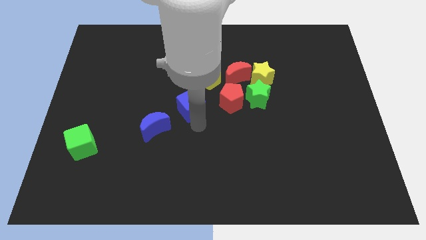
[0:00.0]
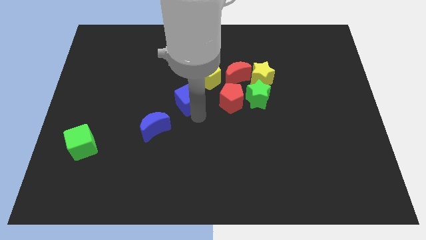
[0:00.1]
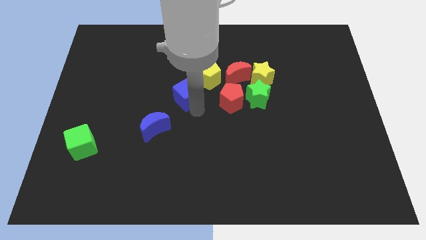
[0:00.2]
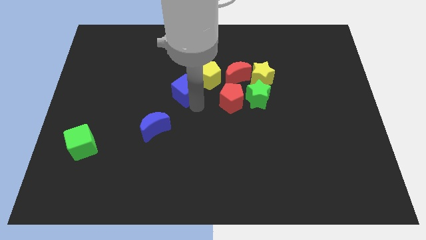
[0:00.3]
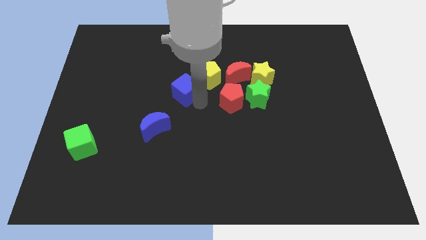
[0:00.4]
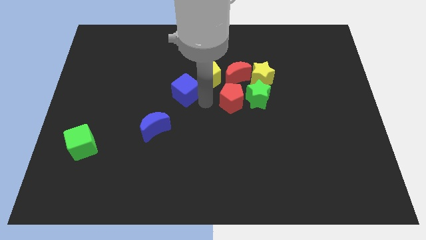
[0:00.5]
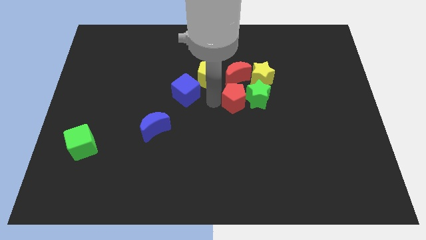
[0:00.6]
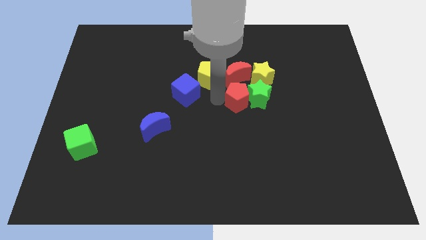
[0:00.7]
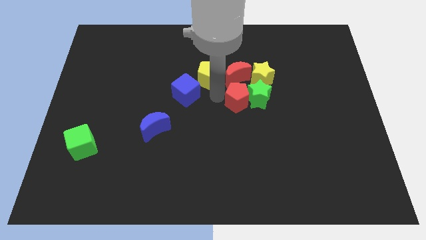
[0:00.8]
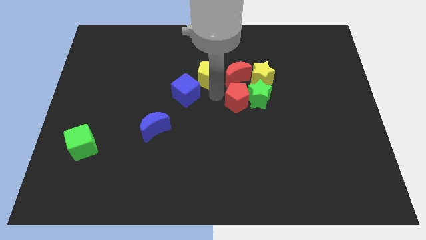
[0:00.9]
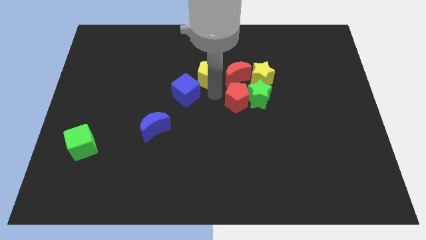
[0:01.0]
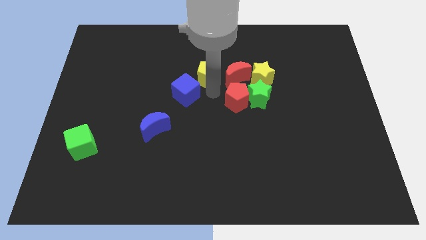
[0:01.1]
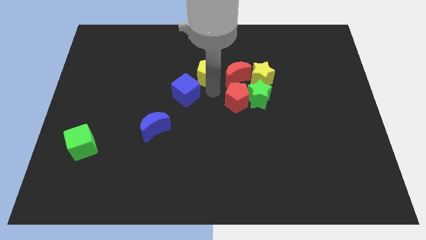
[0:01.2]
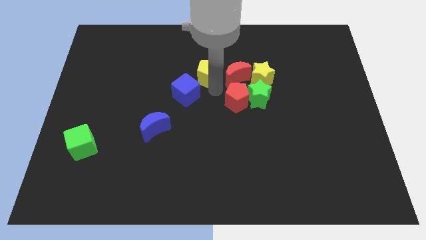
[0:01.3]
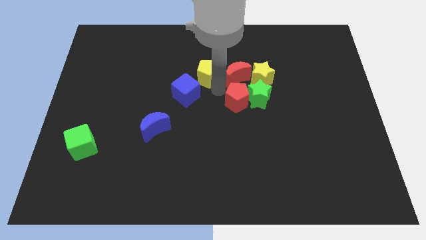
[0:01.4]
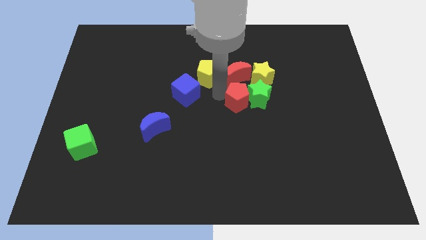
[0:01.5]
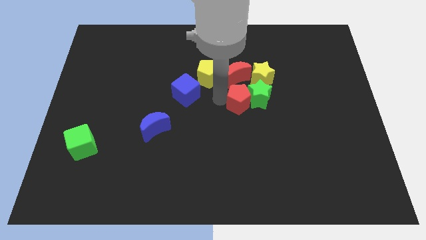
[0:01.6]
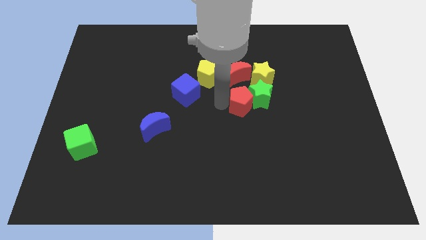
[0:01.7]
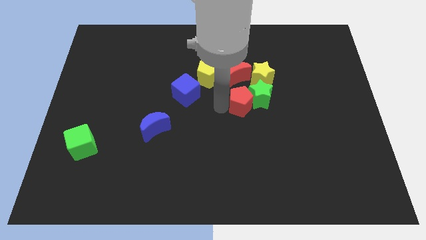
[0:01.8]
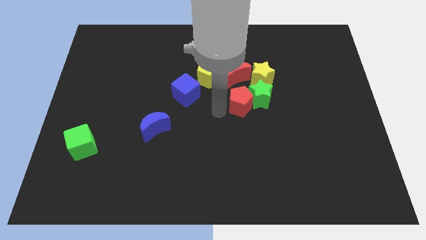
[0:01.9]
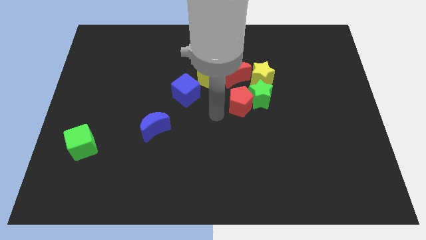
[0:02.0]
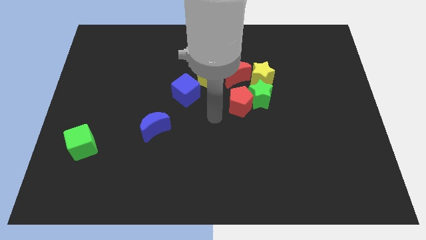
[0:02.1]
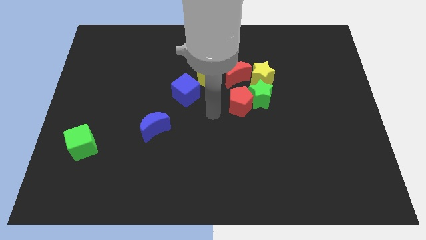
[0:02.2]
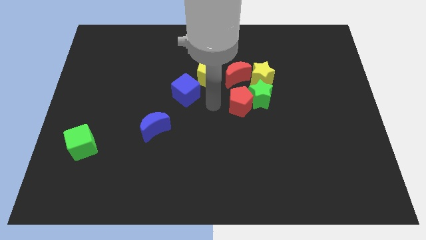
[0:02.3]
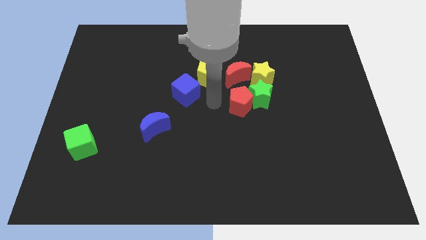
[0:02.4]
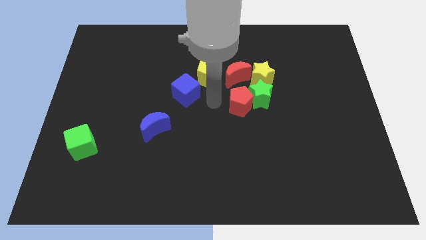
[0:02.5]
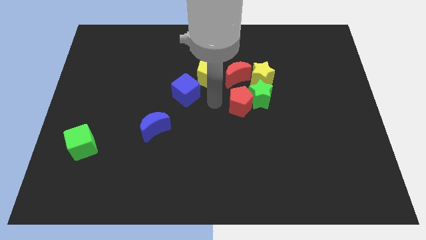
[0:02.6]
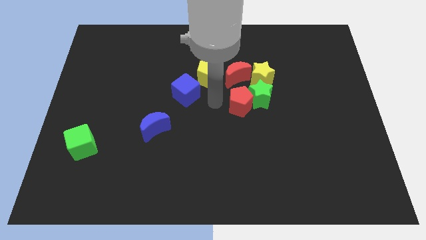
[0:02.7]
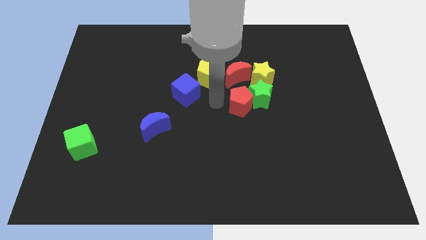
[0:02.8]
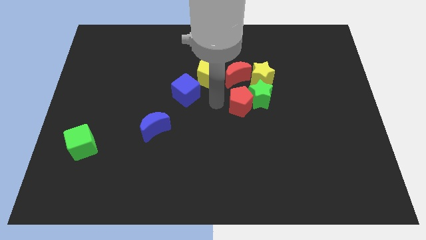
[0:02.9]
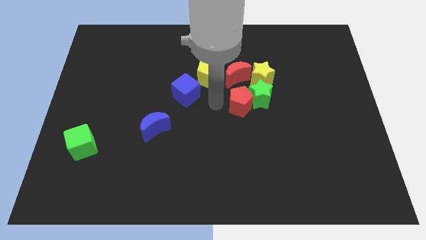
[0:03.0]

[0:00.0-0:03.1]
move the blue cube to the bottom left of yellow pentagon

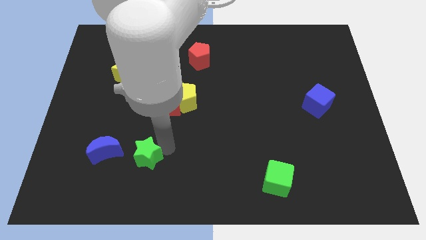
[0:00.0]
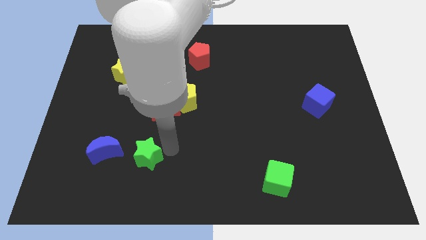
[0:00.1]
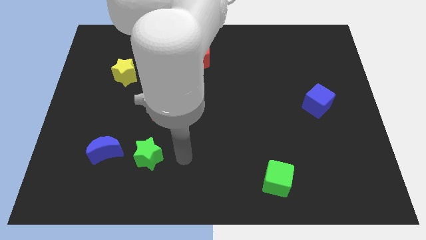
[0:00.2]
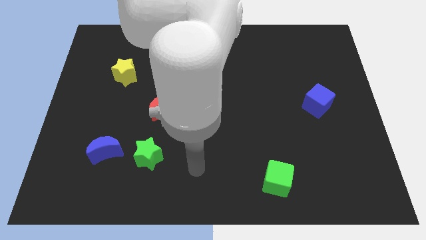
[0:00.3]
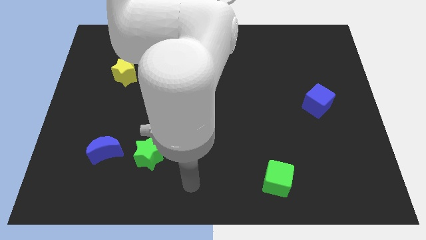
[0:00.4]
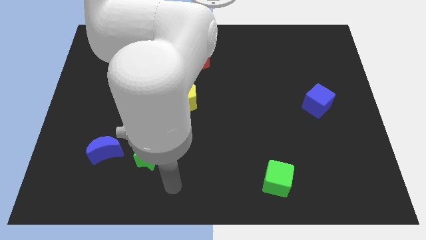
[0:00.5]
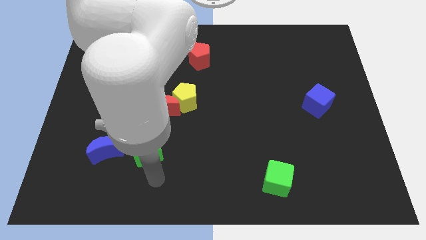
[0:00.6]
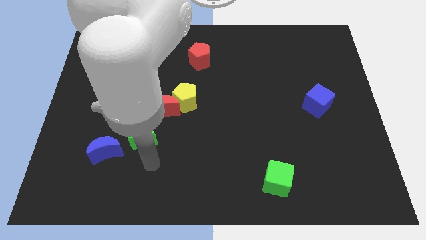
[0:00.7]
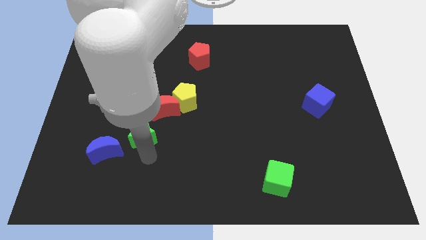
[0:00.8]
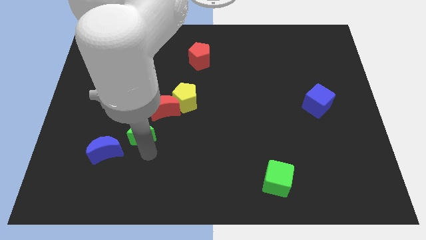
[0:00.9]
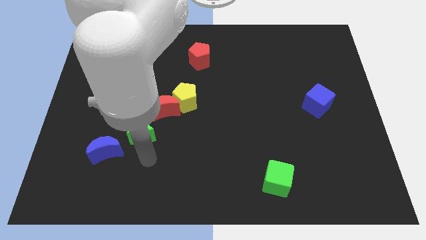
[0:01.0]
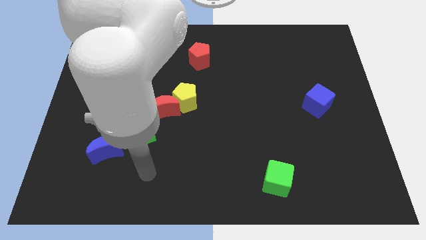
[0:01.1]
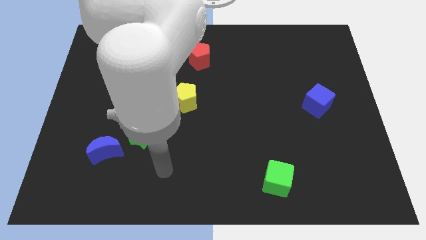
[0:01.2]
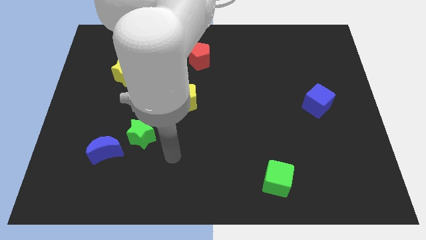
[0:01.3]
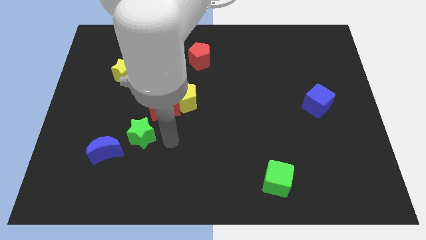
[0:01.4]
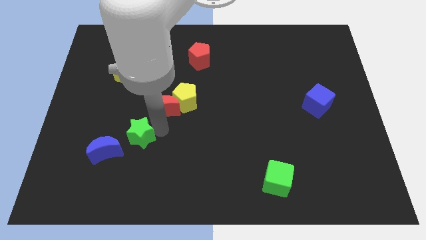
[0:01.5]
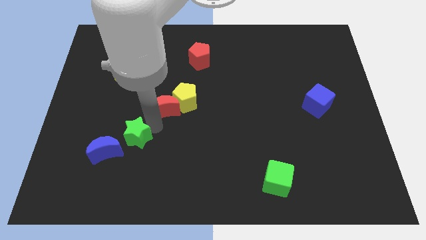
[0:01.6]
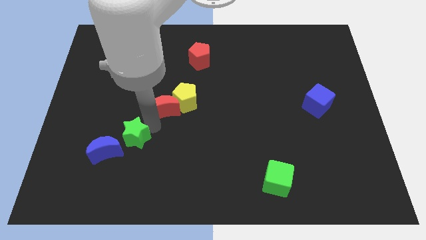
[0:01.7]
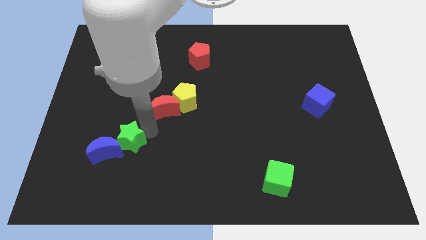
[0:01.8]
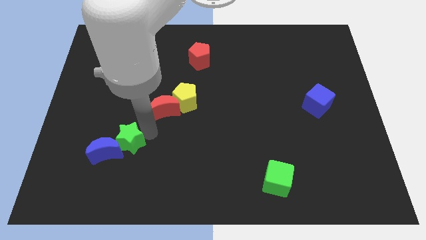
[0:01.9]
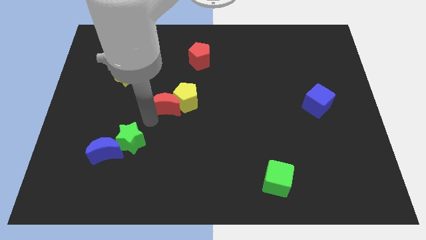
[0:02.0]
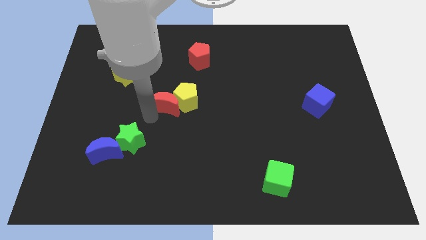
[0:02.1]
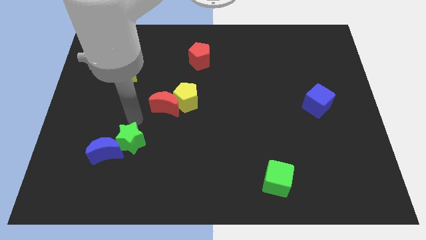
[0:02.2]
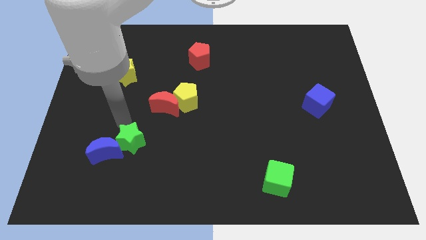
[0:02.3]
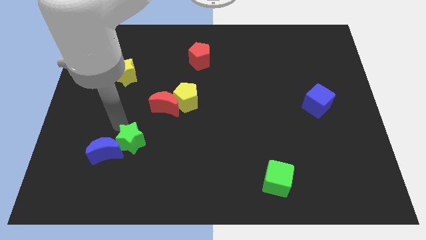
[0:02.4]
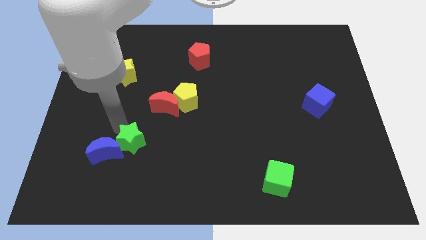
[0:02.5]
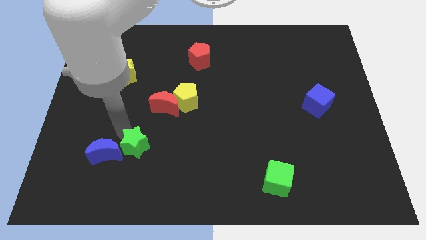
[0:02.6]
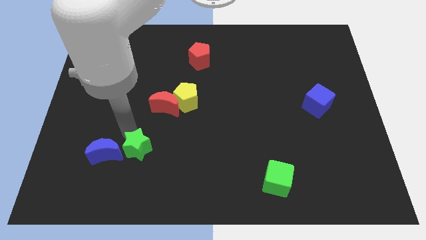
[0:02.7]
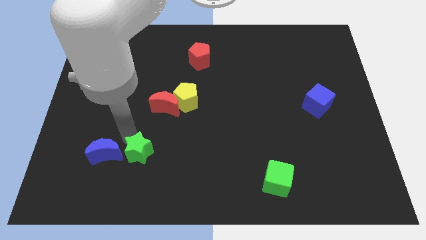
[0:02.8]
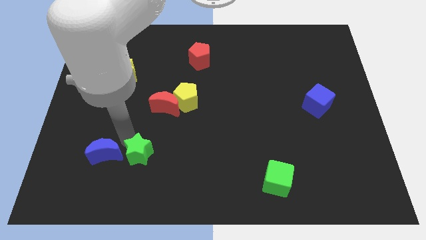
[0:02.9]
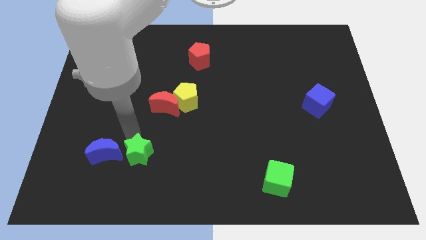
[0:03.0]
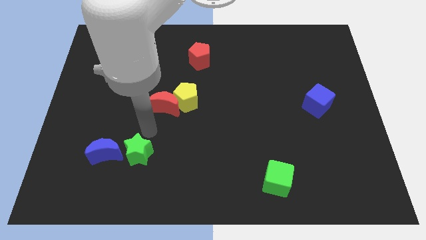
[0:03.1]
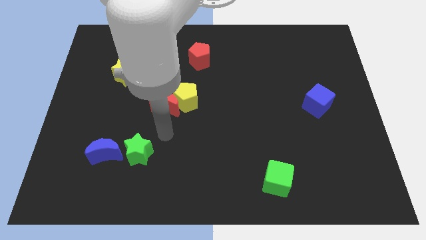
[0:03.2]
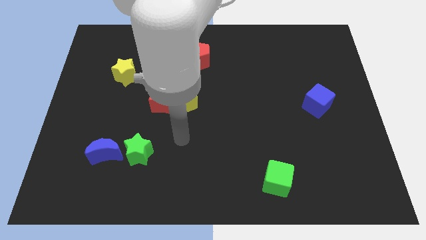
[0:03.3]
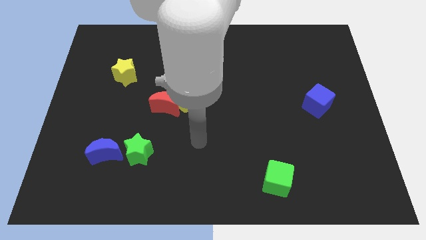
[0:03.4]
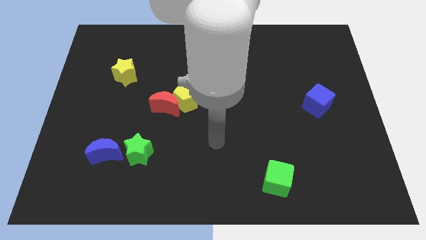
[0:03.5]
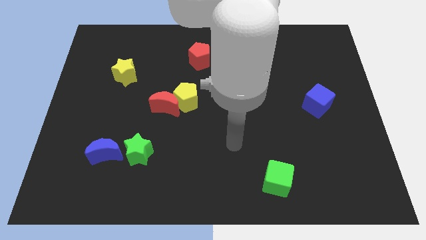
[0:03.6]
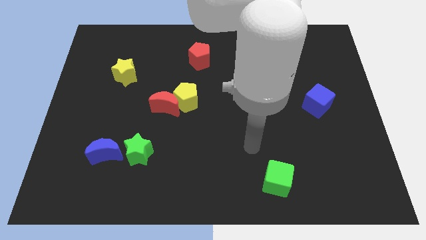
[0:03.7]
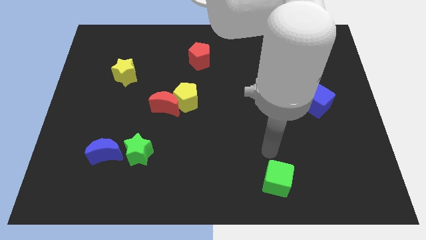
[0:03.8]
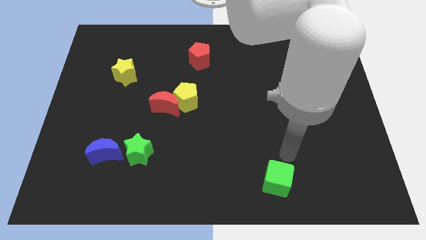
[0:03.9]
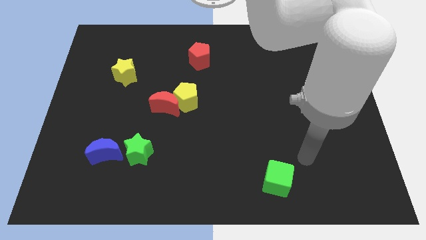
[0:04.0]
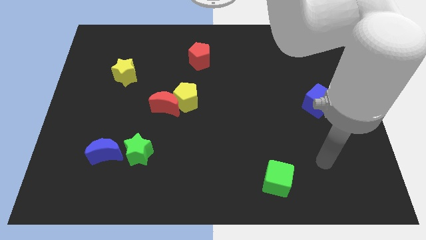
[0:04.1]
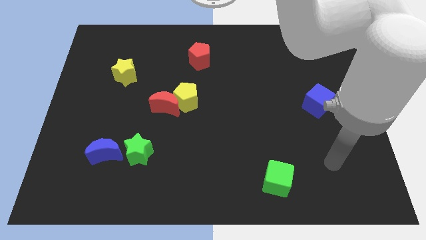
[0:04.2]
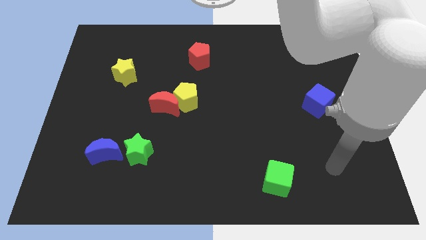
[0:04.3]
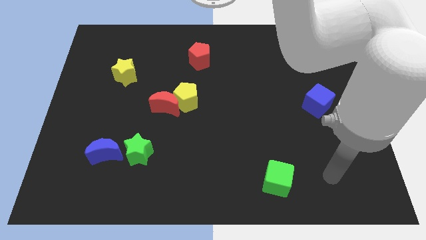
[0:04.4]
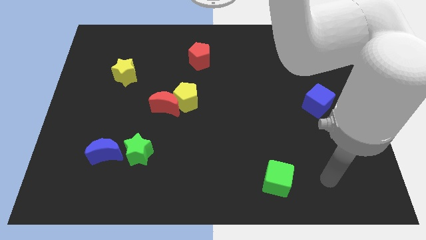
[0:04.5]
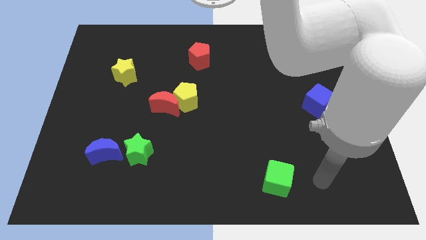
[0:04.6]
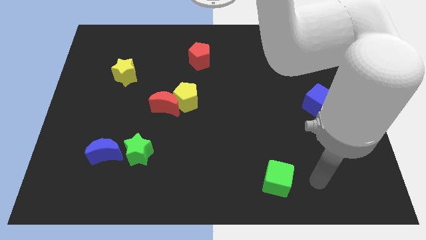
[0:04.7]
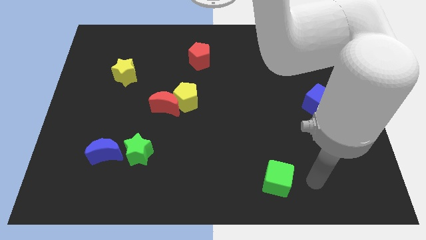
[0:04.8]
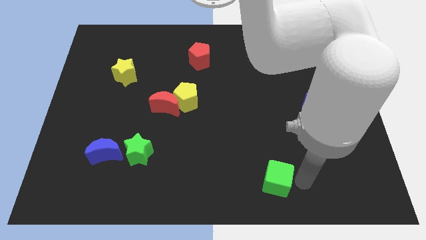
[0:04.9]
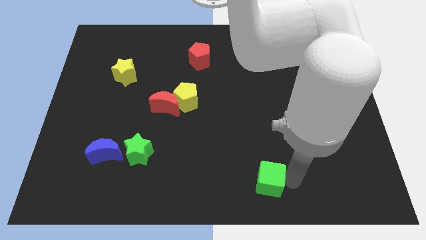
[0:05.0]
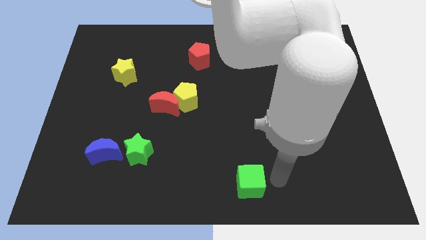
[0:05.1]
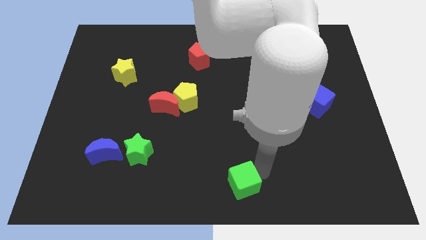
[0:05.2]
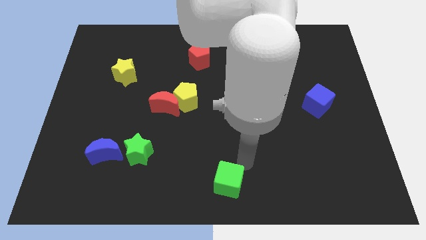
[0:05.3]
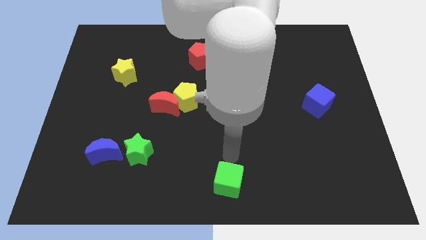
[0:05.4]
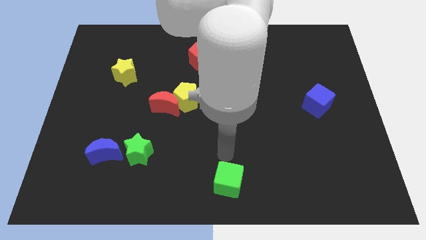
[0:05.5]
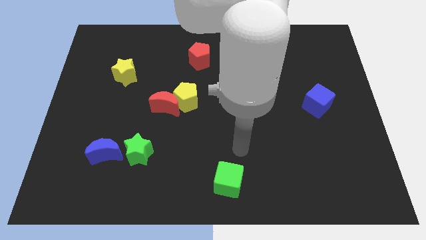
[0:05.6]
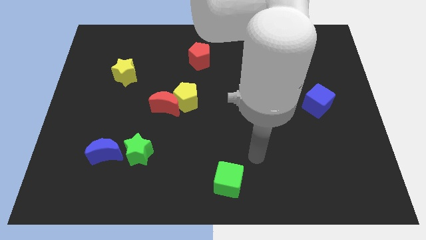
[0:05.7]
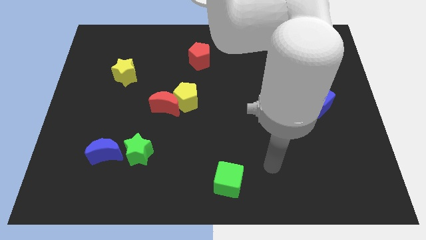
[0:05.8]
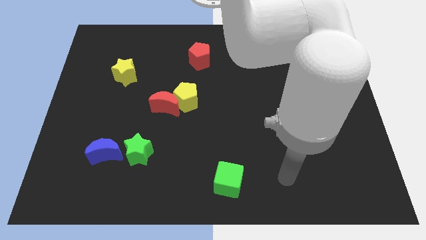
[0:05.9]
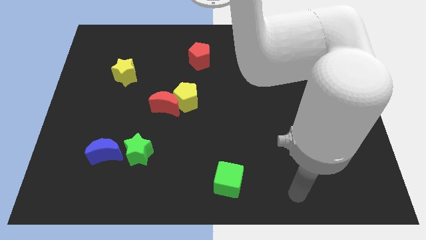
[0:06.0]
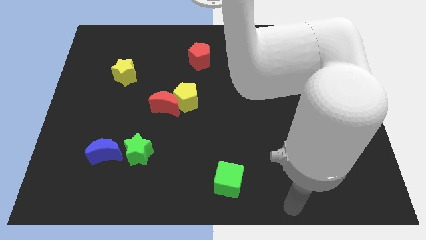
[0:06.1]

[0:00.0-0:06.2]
move your arm towards the green cube on bottom right of the board
